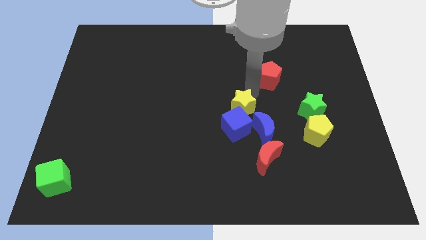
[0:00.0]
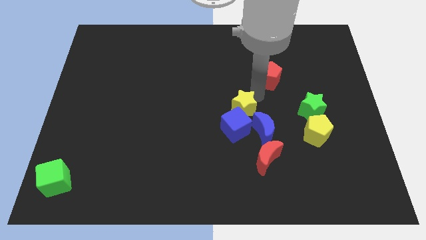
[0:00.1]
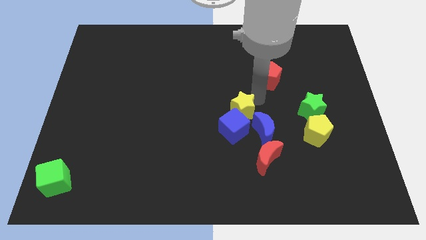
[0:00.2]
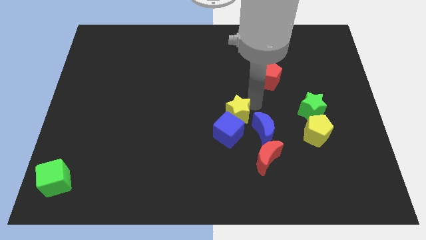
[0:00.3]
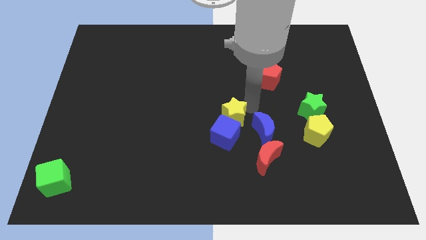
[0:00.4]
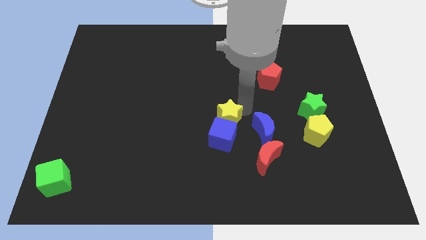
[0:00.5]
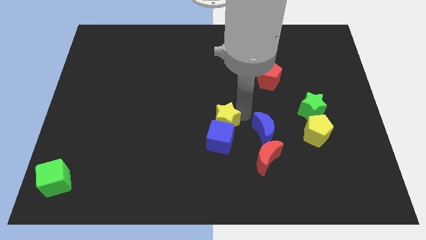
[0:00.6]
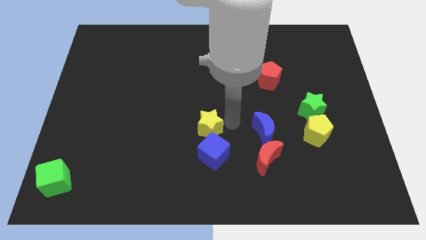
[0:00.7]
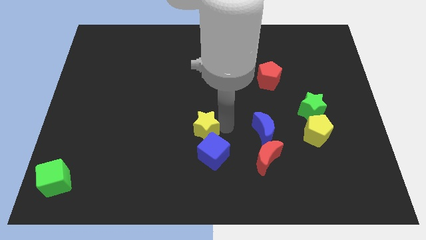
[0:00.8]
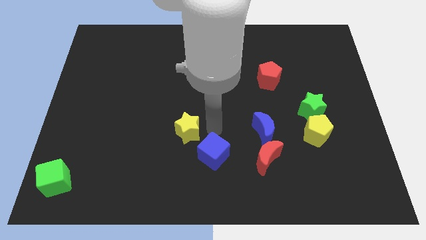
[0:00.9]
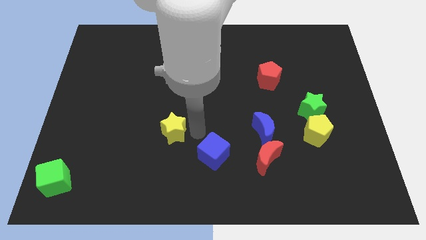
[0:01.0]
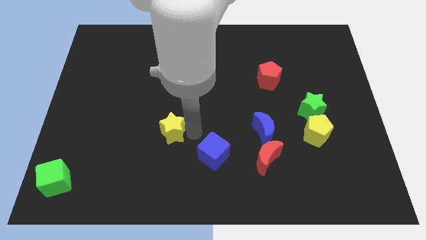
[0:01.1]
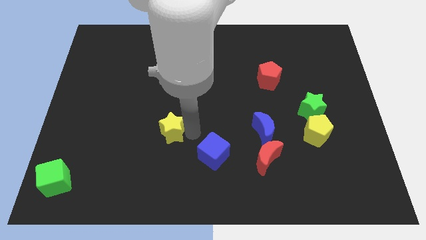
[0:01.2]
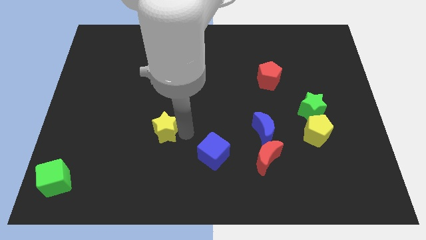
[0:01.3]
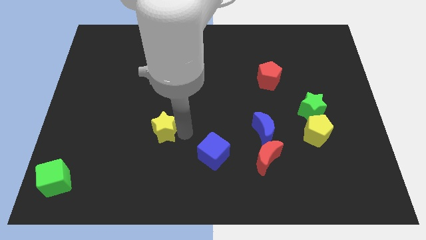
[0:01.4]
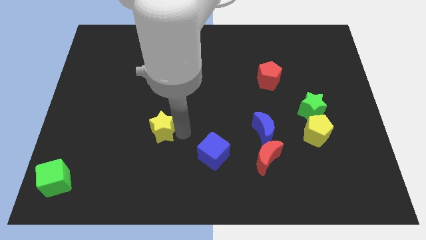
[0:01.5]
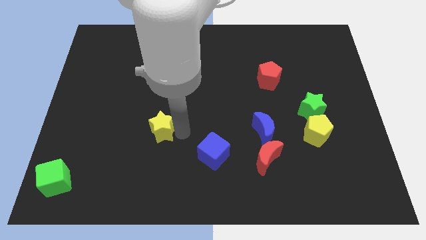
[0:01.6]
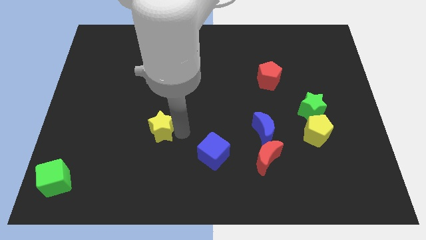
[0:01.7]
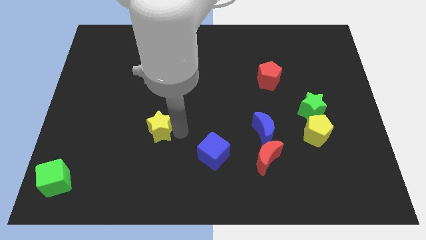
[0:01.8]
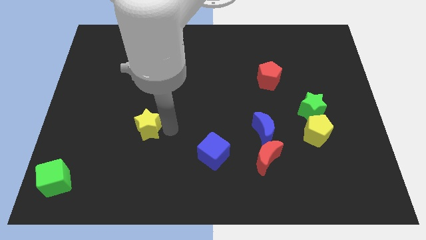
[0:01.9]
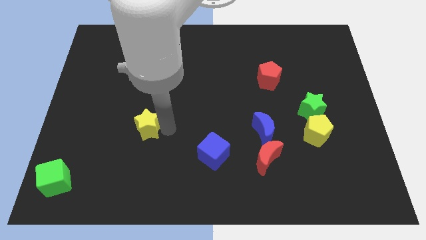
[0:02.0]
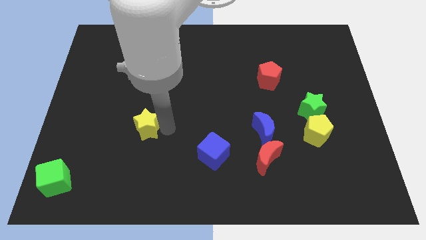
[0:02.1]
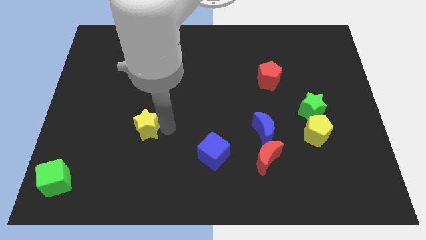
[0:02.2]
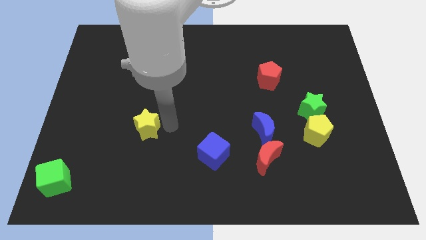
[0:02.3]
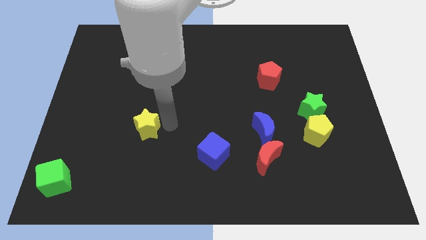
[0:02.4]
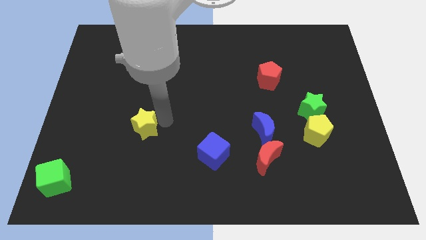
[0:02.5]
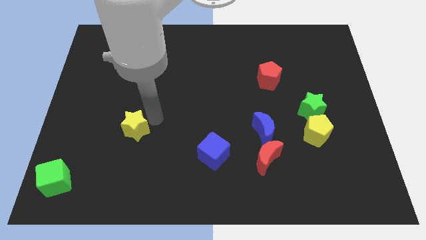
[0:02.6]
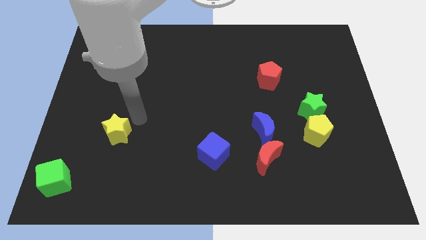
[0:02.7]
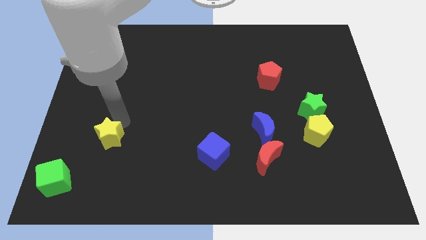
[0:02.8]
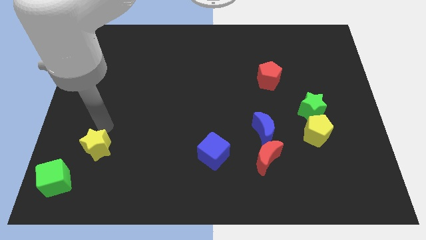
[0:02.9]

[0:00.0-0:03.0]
move the yellow star diagonally top right to the green cube

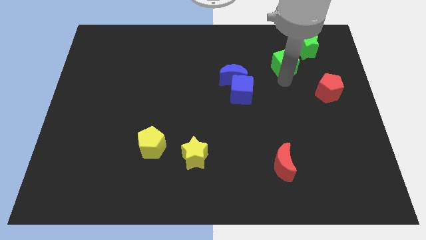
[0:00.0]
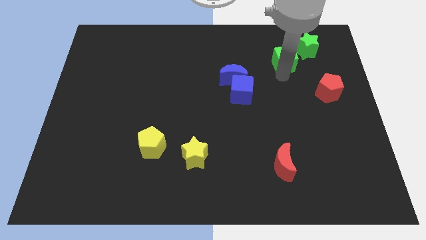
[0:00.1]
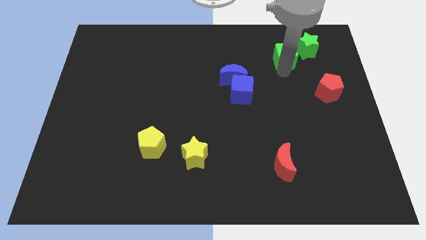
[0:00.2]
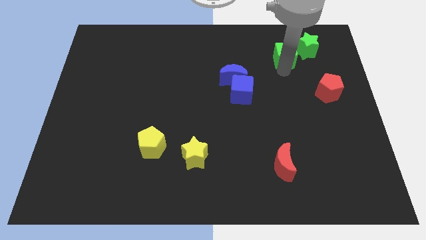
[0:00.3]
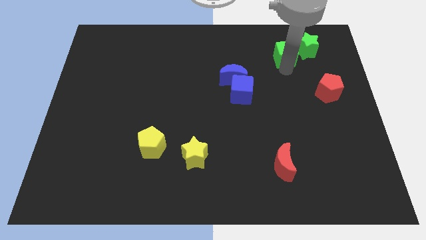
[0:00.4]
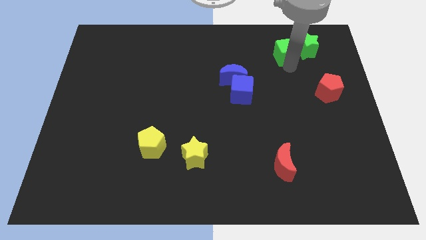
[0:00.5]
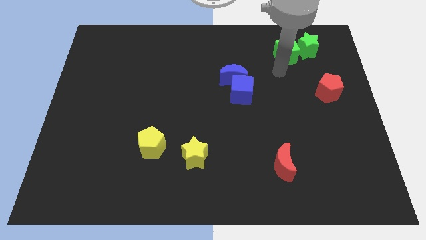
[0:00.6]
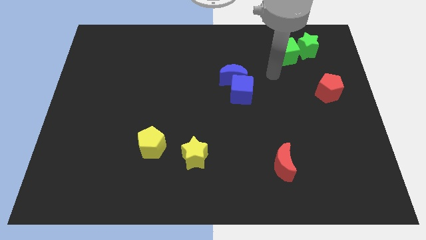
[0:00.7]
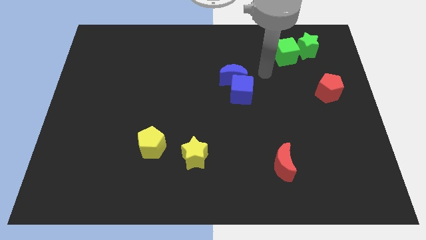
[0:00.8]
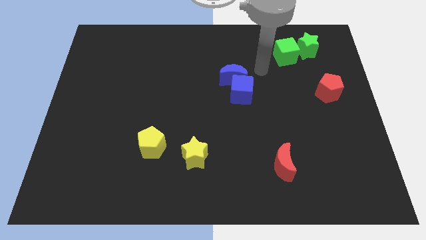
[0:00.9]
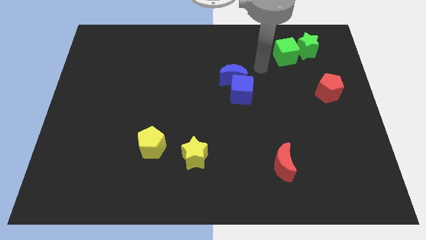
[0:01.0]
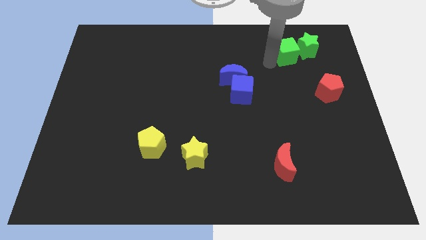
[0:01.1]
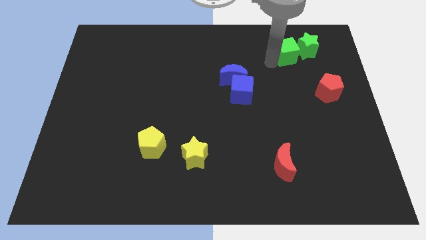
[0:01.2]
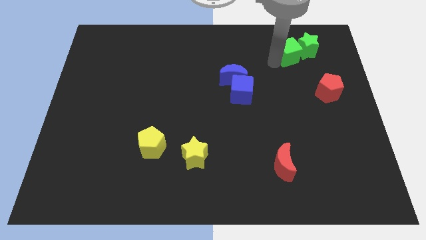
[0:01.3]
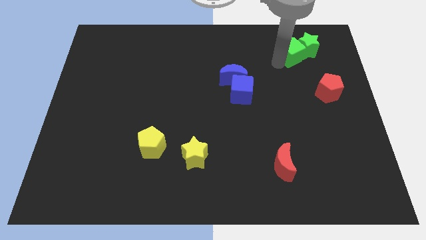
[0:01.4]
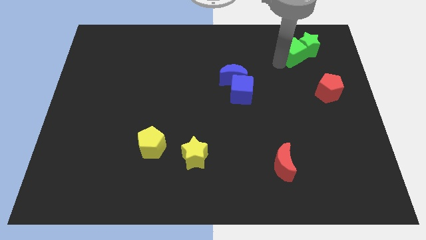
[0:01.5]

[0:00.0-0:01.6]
move the green cube into the green star

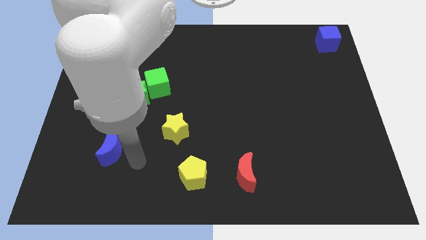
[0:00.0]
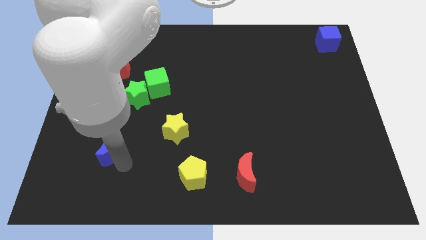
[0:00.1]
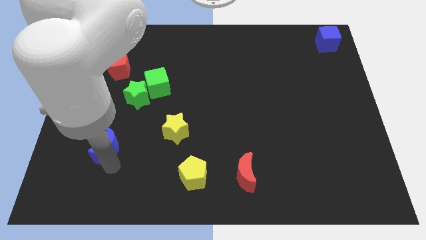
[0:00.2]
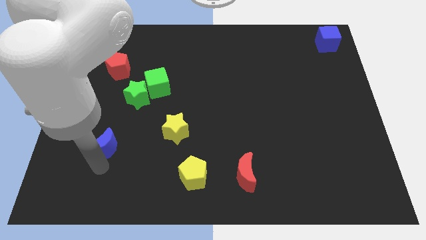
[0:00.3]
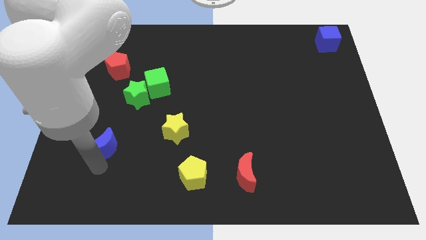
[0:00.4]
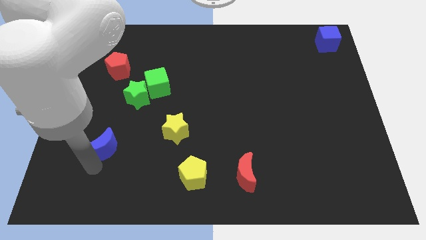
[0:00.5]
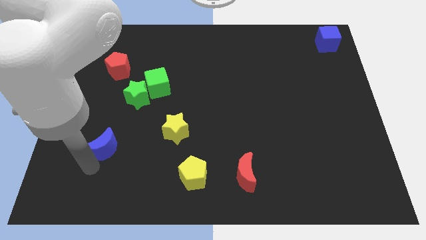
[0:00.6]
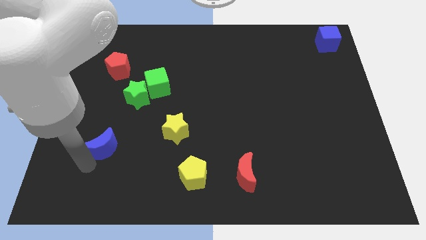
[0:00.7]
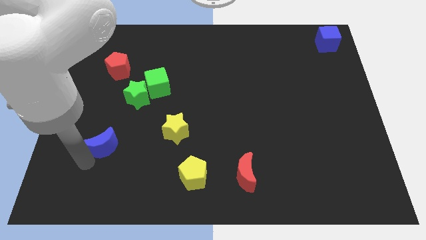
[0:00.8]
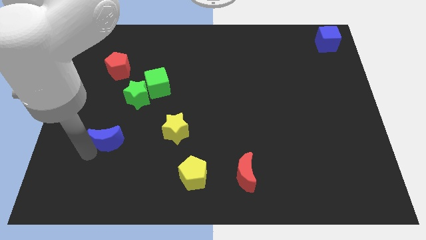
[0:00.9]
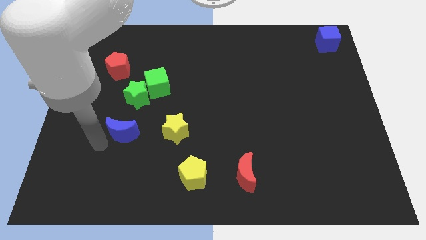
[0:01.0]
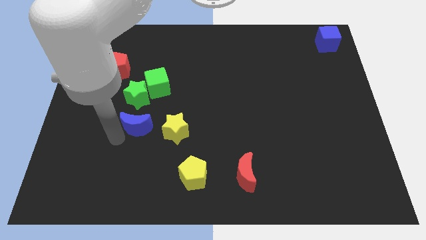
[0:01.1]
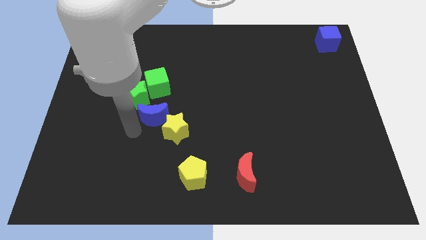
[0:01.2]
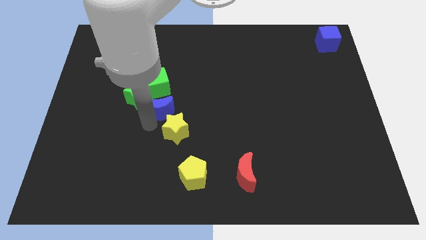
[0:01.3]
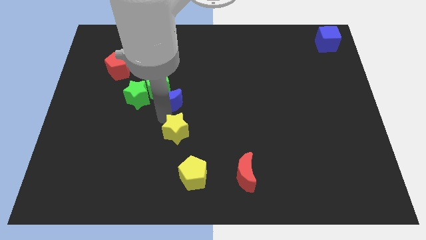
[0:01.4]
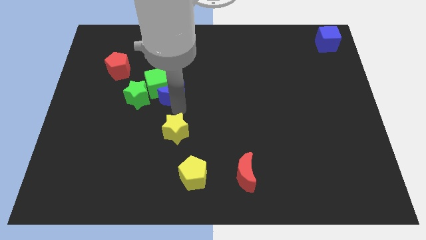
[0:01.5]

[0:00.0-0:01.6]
place blue crescent below green cube

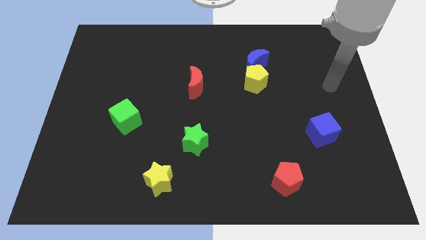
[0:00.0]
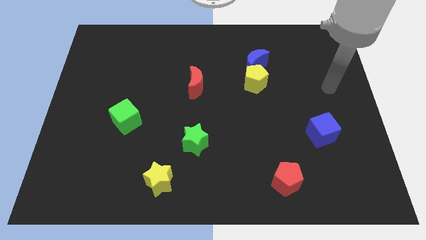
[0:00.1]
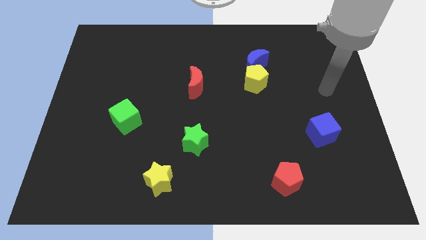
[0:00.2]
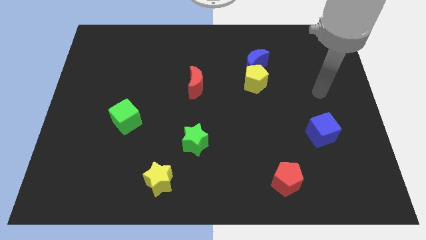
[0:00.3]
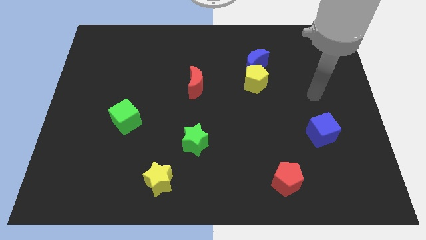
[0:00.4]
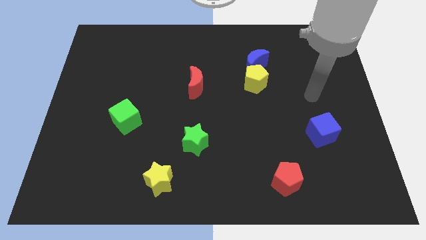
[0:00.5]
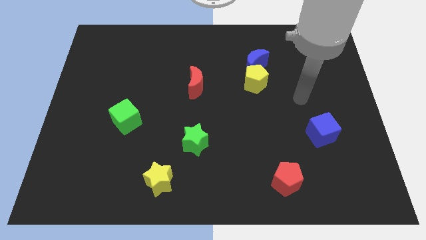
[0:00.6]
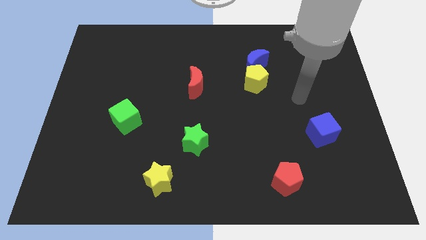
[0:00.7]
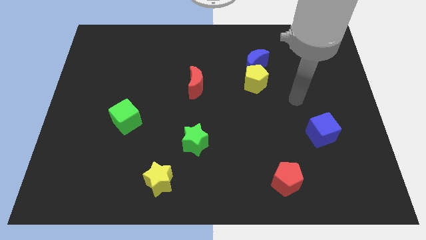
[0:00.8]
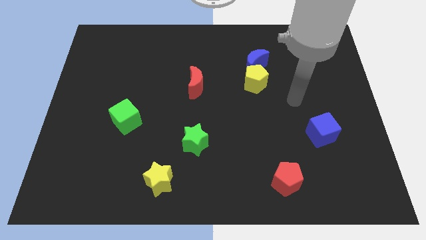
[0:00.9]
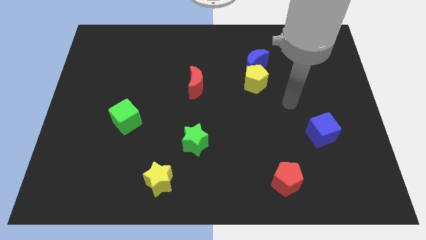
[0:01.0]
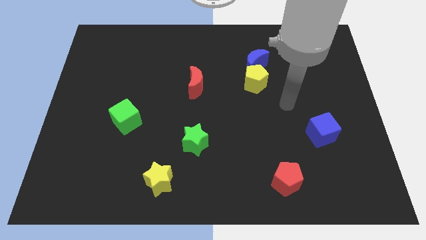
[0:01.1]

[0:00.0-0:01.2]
place your arm in between yellow pentagon and blue cube

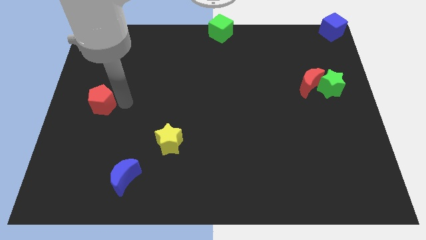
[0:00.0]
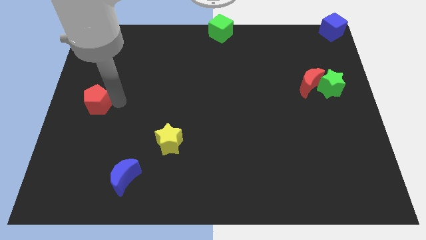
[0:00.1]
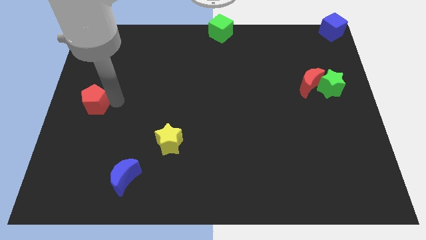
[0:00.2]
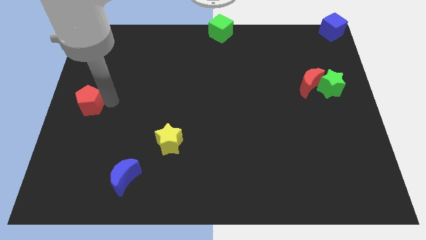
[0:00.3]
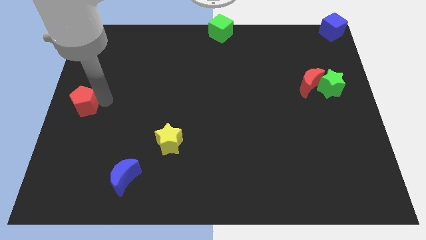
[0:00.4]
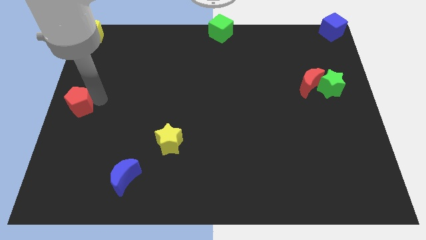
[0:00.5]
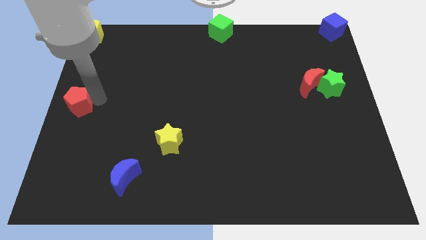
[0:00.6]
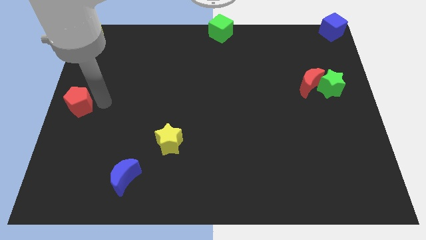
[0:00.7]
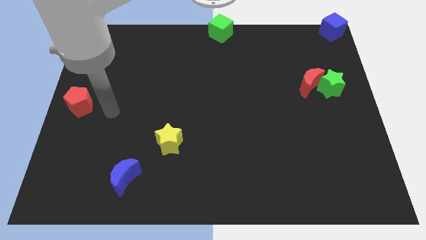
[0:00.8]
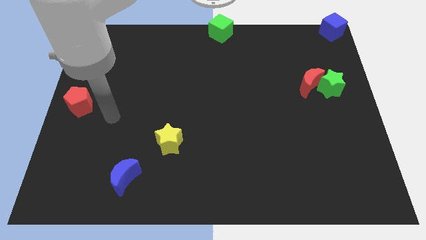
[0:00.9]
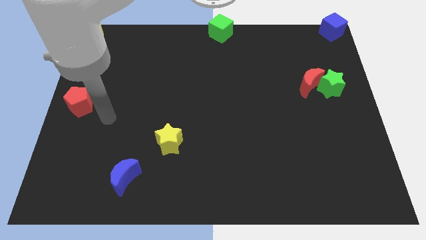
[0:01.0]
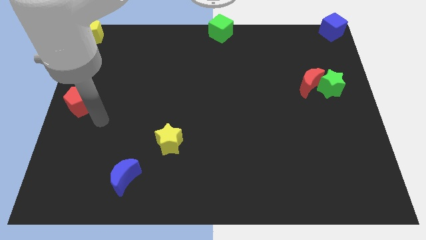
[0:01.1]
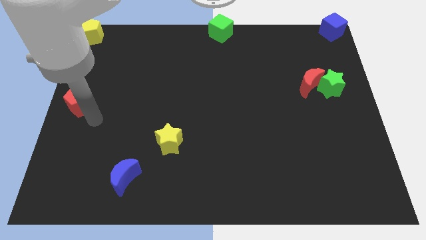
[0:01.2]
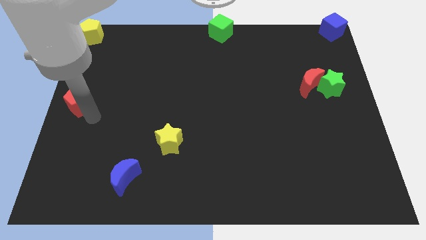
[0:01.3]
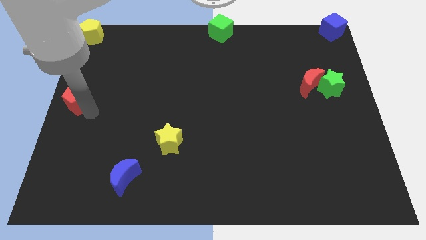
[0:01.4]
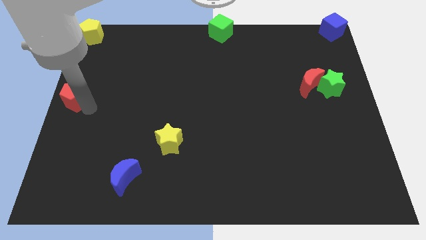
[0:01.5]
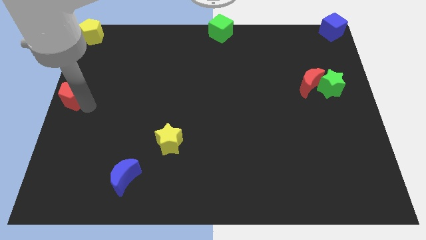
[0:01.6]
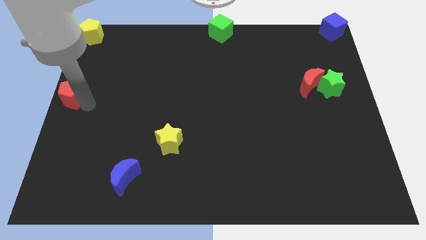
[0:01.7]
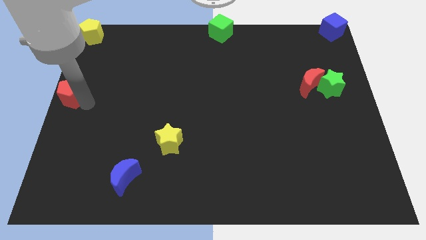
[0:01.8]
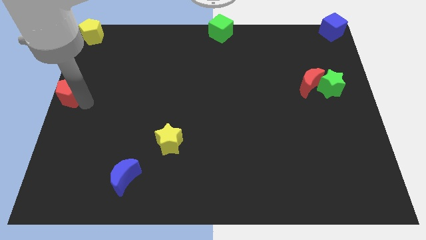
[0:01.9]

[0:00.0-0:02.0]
place red pentagon towards left middle end of the board
